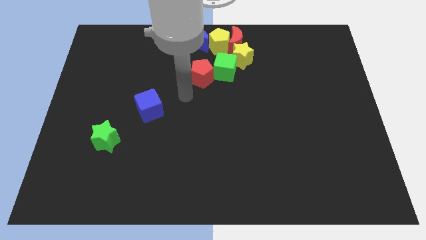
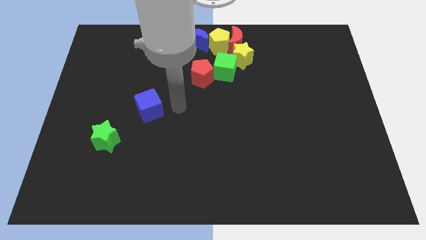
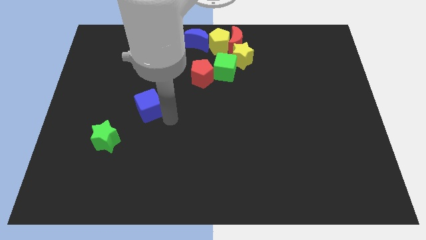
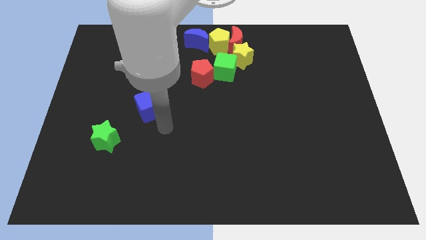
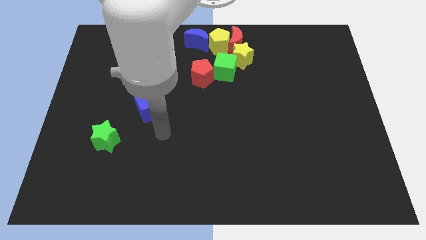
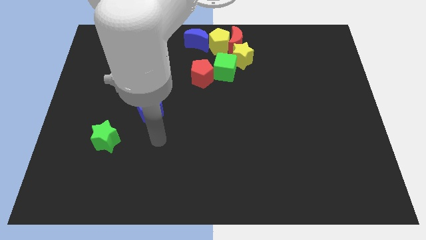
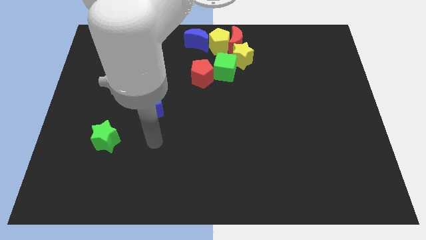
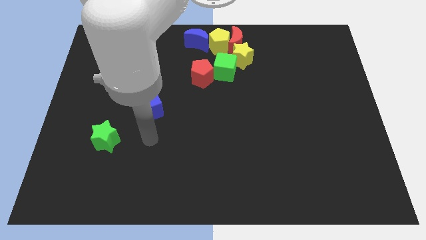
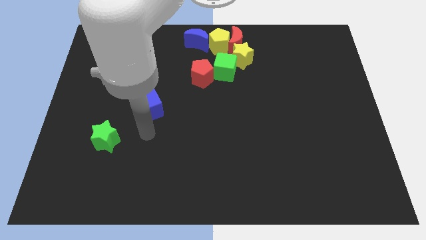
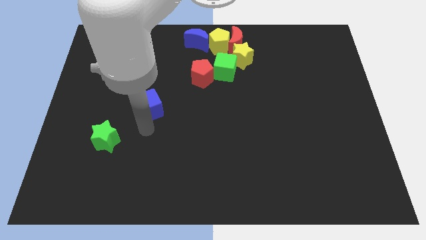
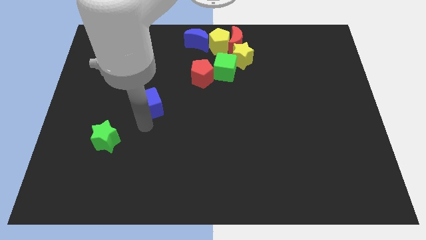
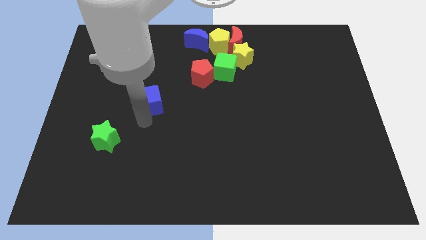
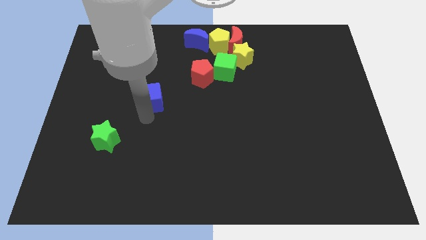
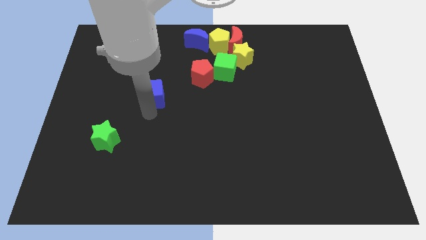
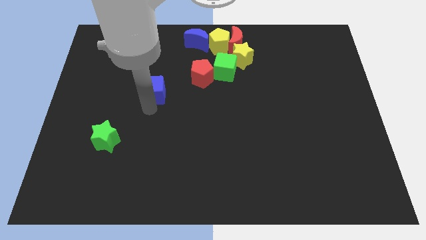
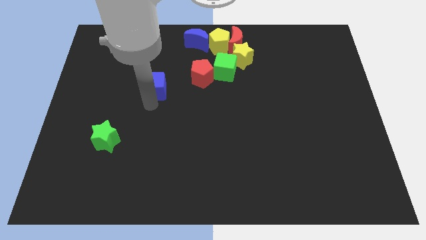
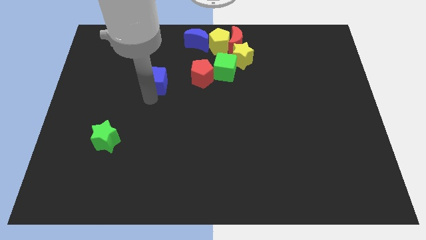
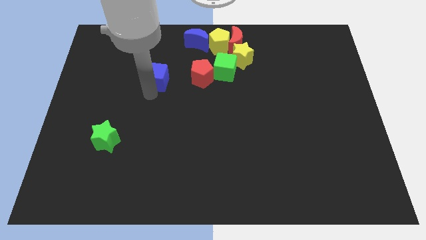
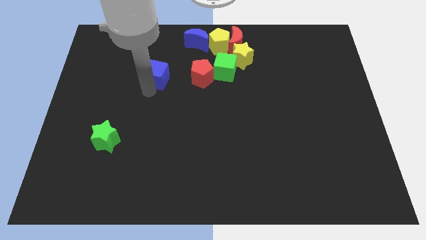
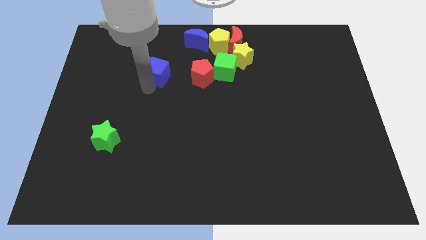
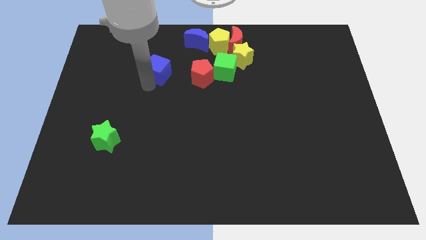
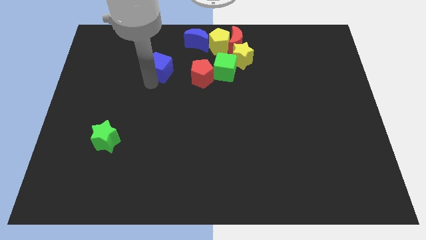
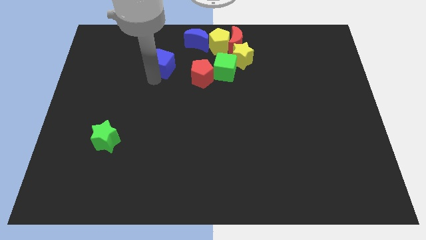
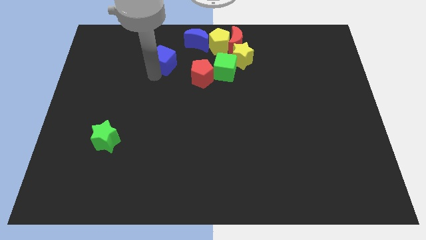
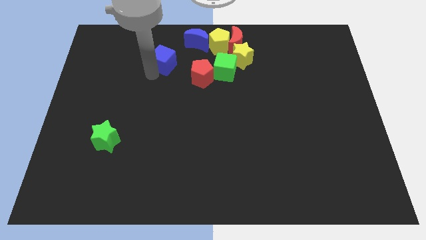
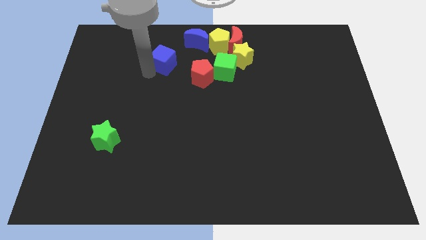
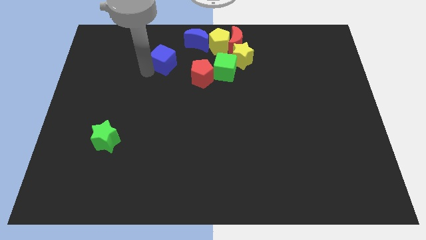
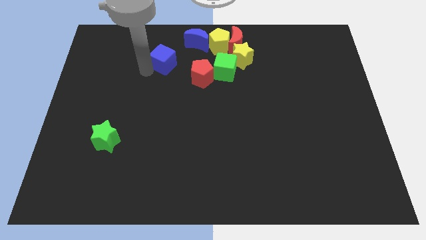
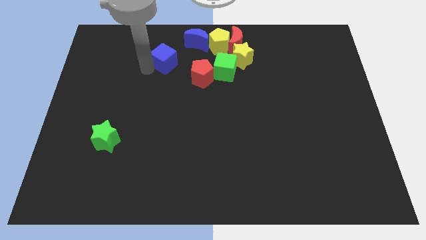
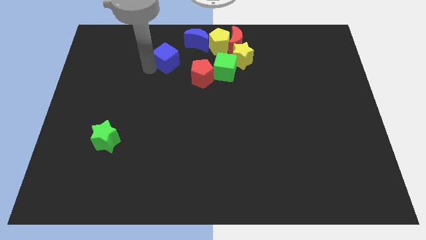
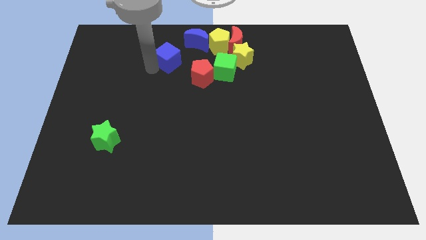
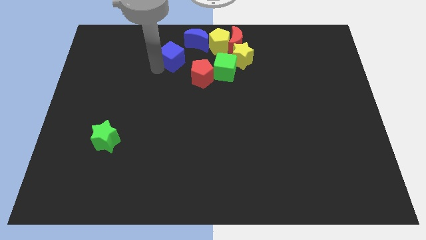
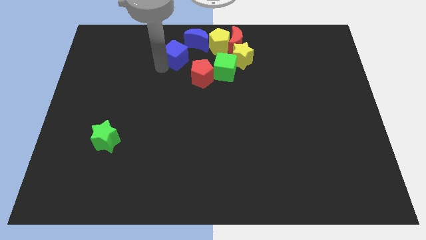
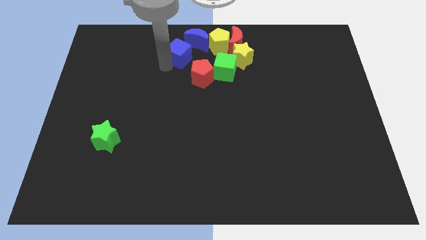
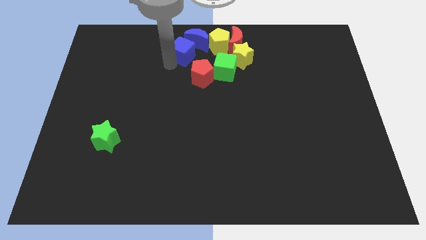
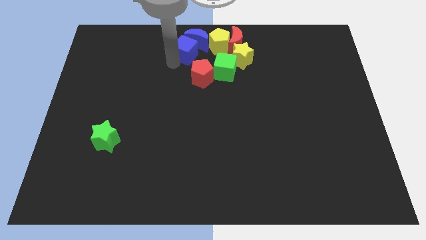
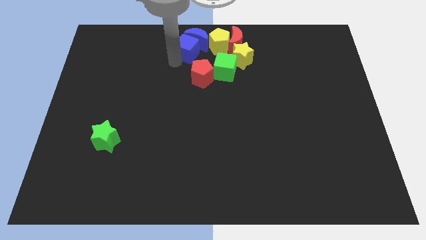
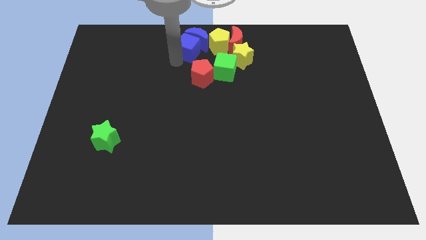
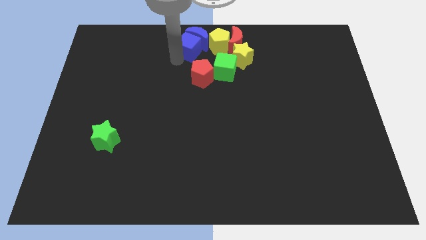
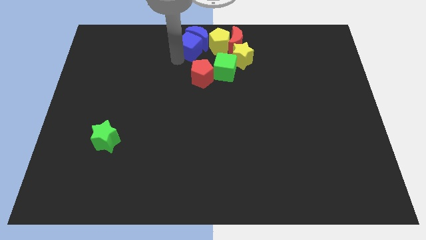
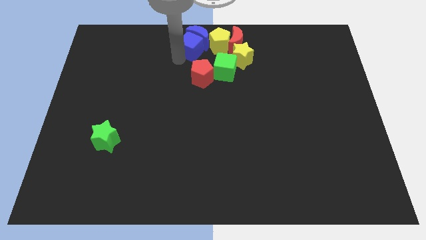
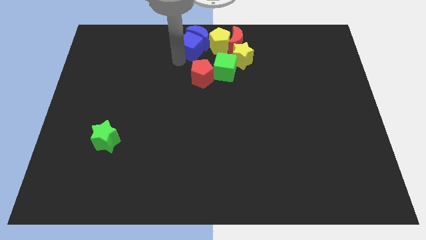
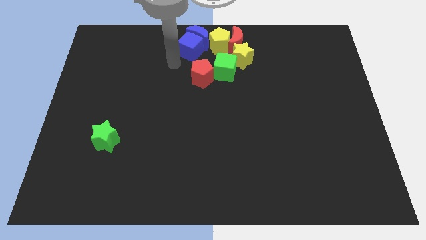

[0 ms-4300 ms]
push the blue cube into the blue moon

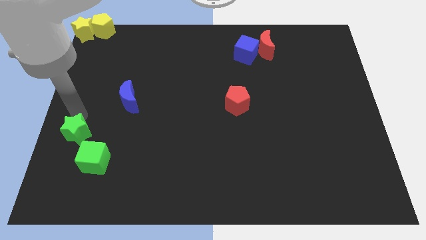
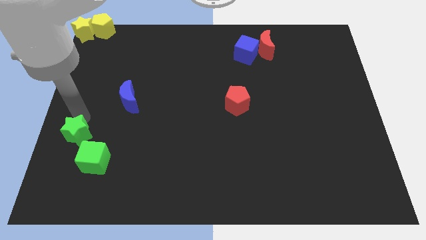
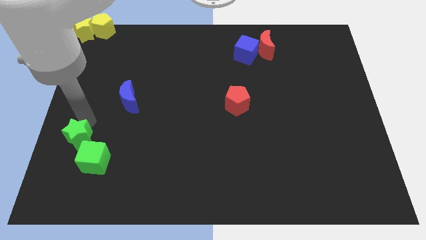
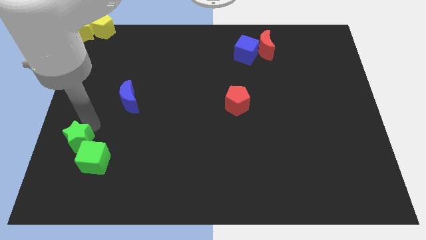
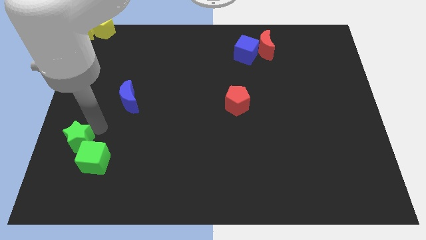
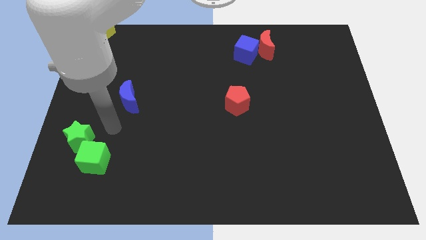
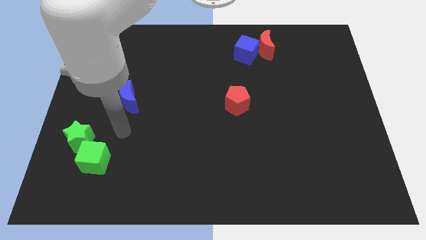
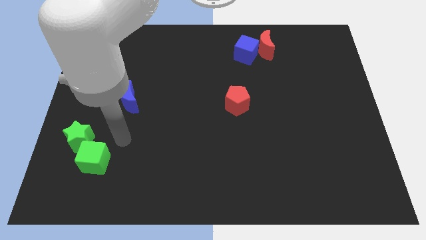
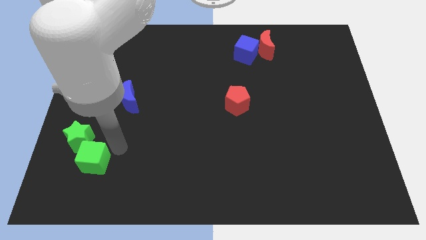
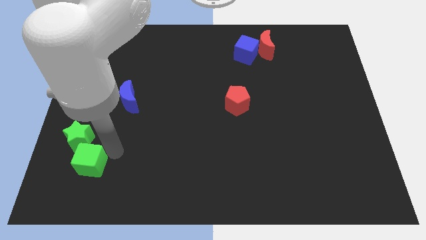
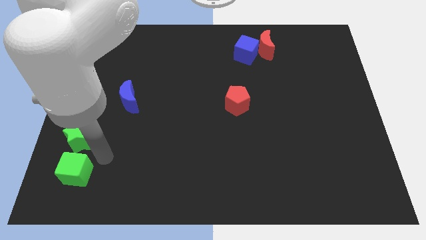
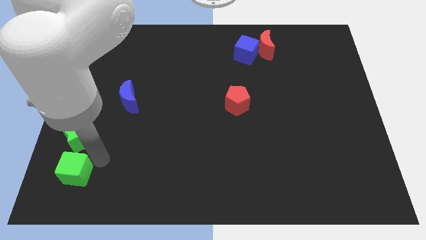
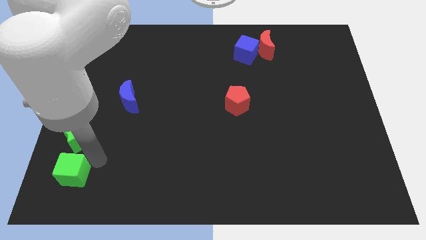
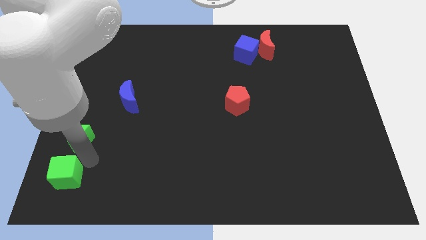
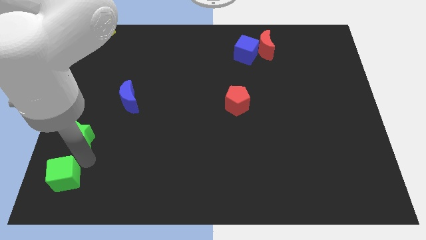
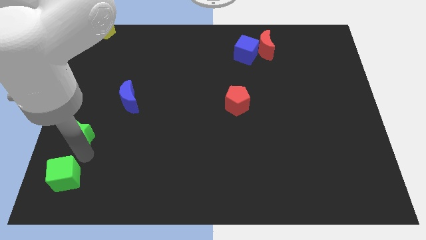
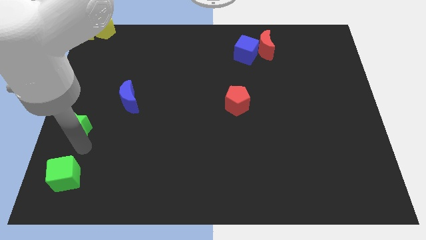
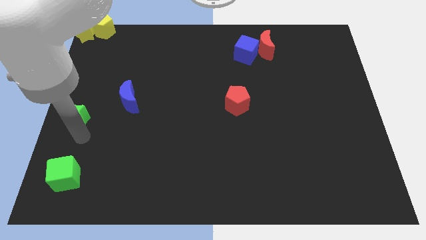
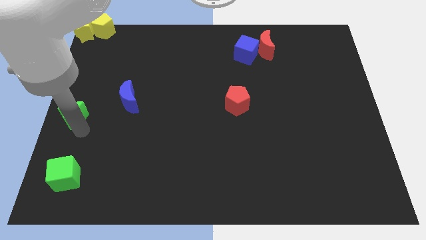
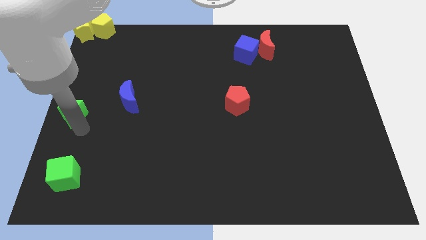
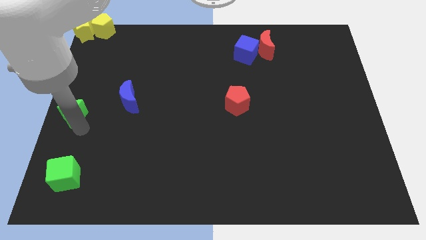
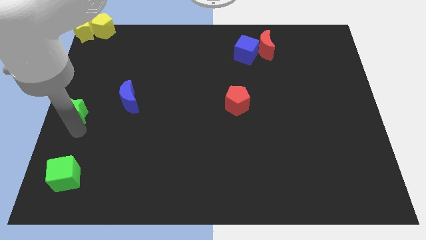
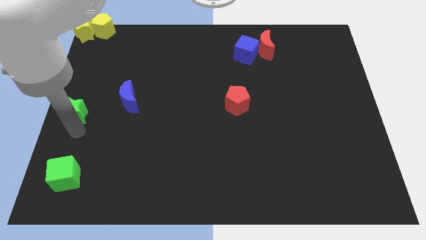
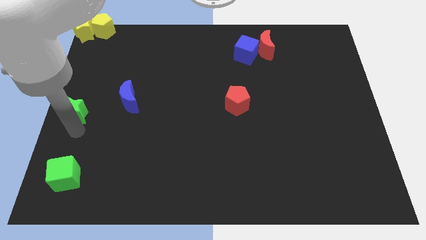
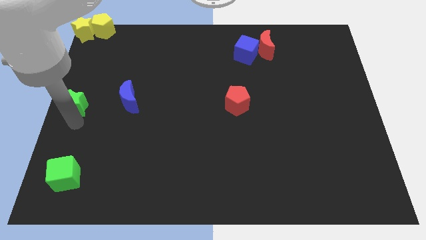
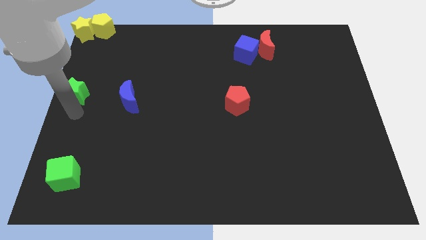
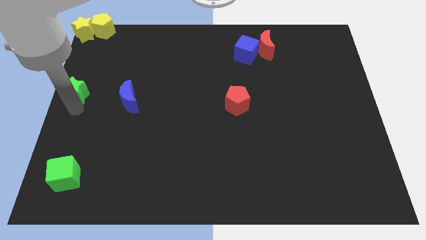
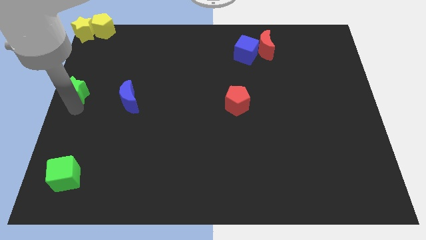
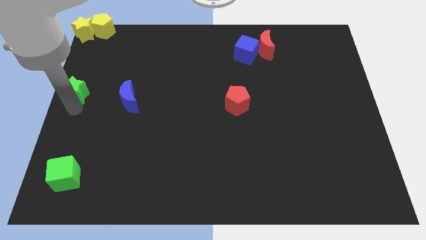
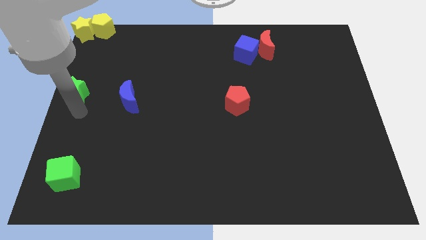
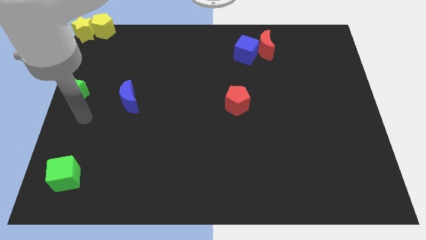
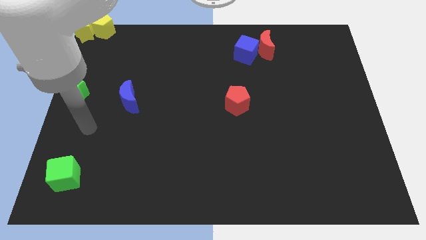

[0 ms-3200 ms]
place the green star to left side of blue moon

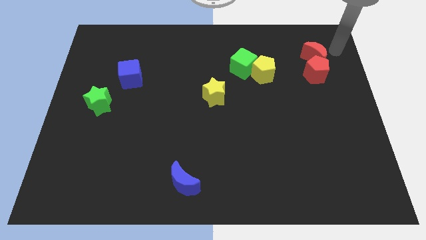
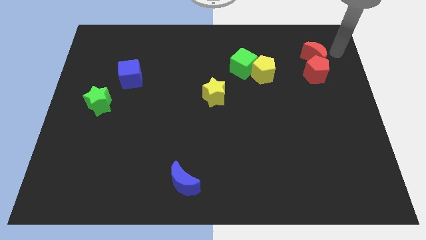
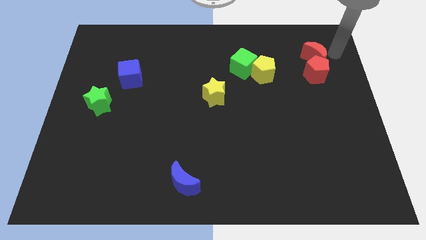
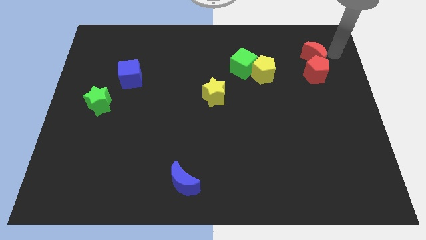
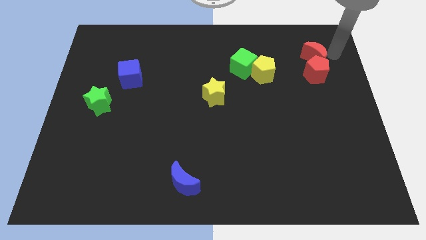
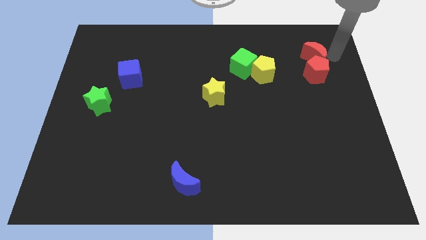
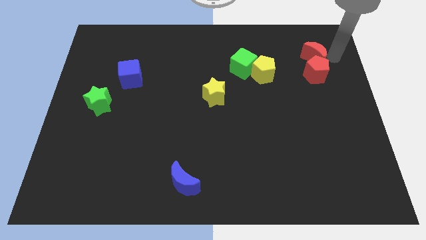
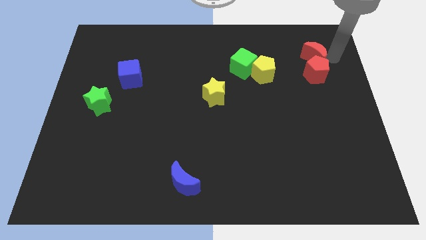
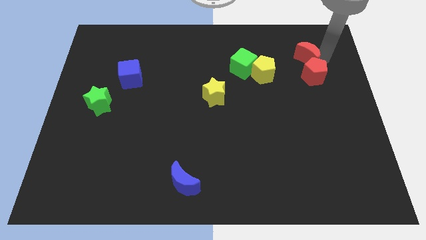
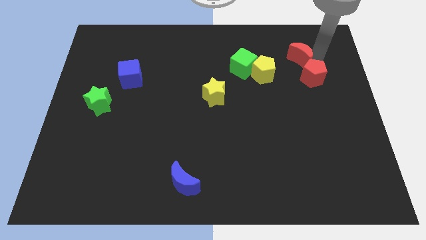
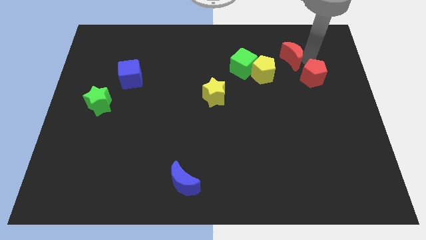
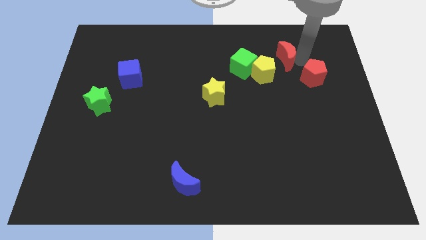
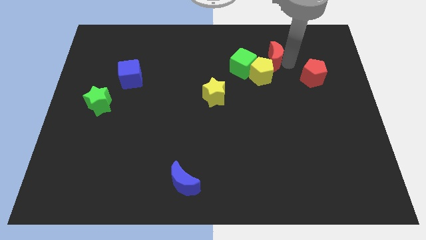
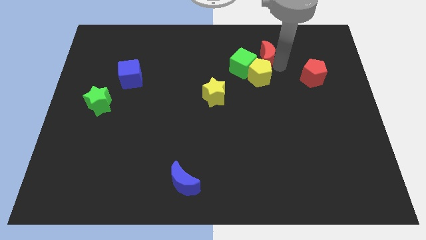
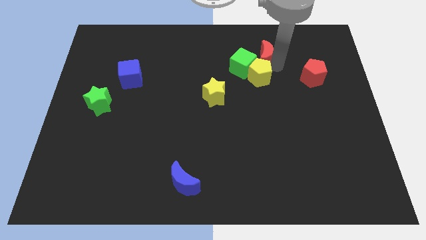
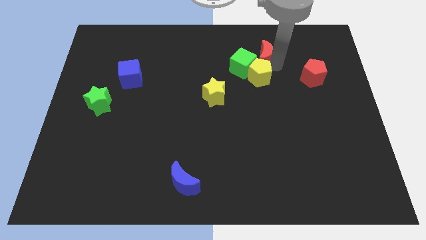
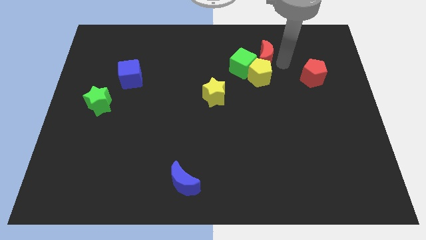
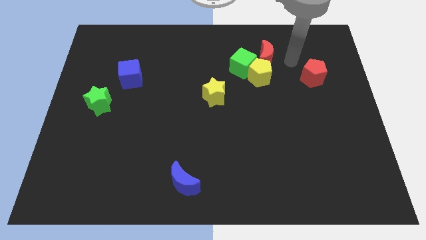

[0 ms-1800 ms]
push the red moon close to the yellow pentagon
